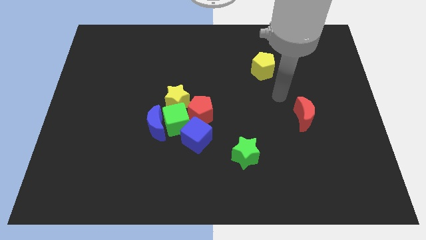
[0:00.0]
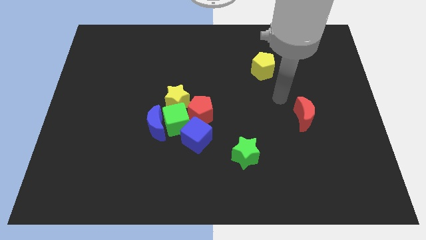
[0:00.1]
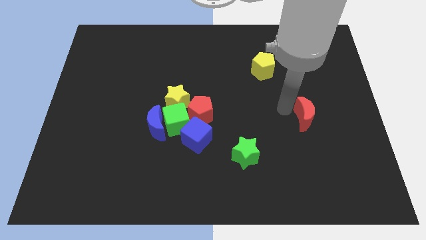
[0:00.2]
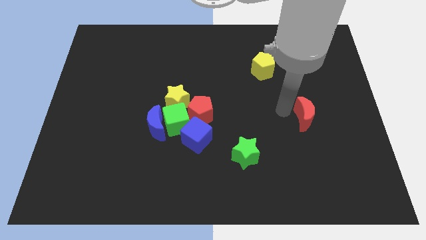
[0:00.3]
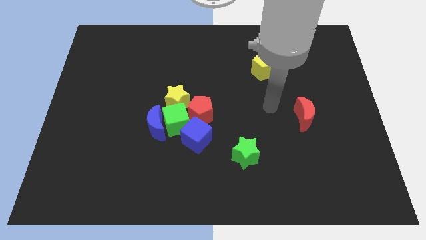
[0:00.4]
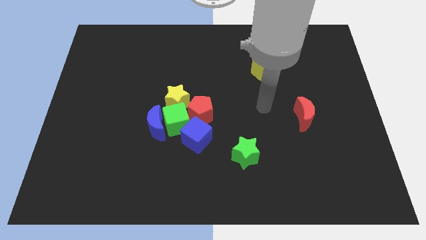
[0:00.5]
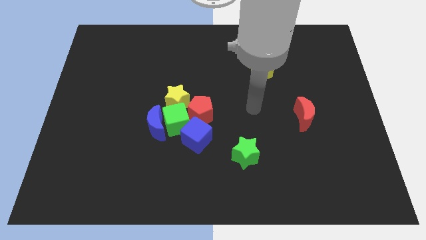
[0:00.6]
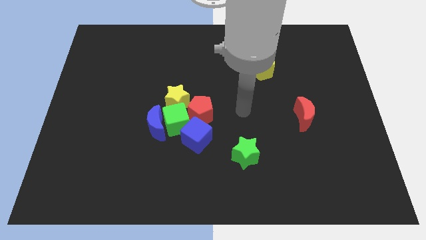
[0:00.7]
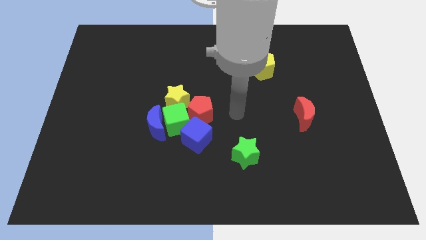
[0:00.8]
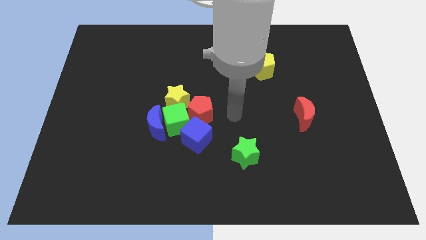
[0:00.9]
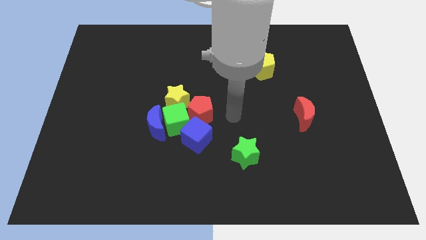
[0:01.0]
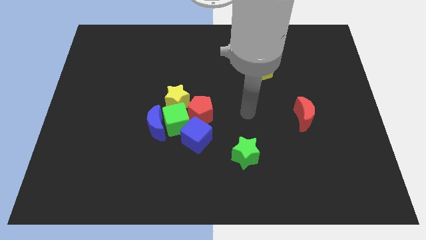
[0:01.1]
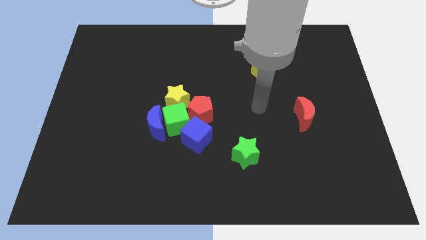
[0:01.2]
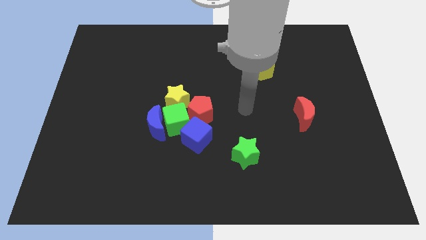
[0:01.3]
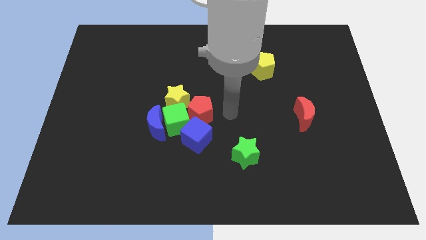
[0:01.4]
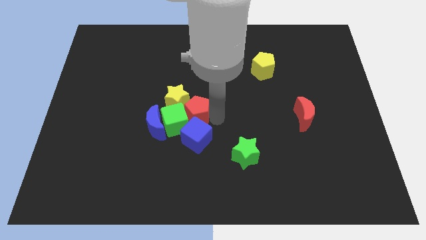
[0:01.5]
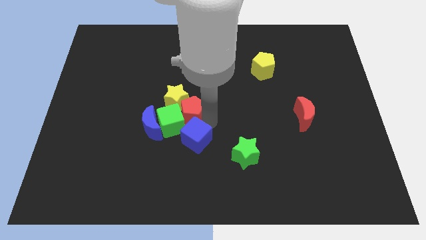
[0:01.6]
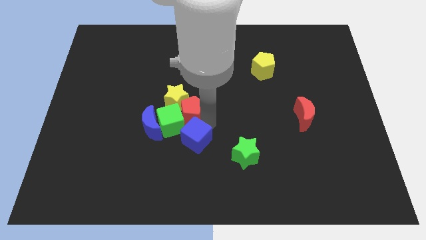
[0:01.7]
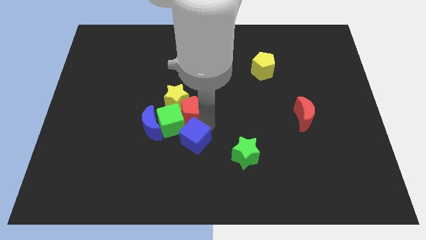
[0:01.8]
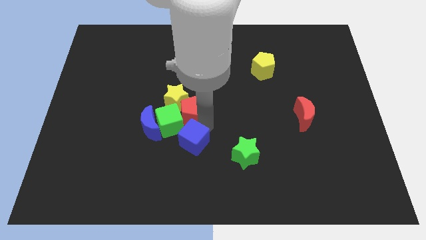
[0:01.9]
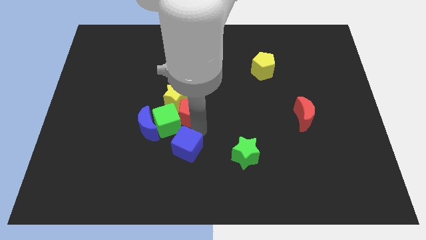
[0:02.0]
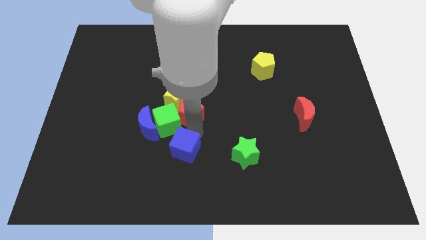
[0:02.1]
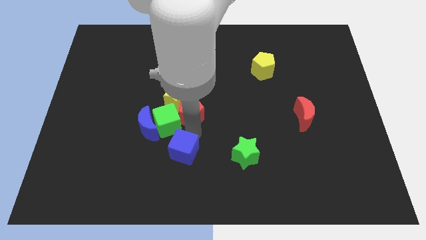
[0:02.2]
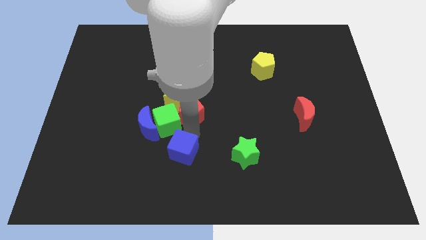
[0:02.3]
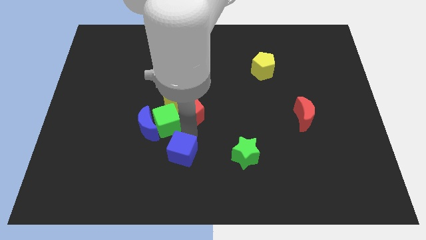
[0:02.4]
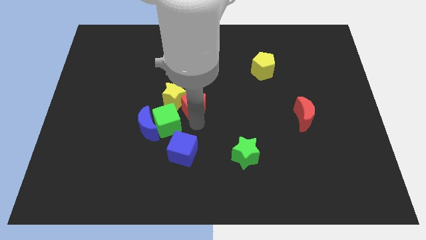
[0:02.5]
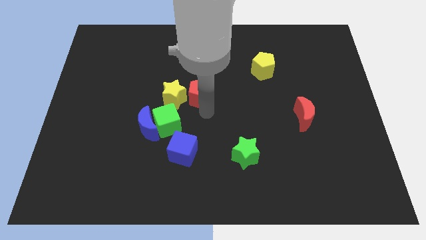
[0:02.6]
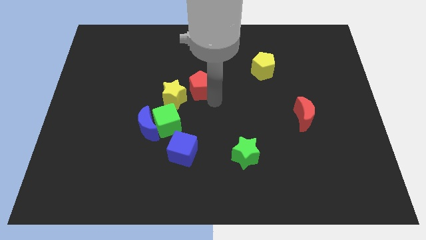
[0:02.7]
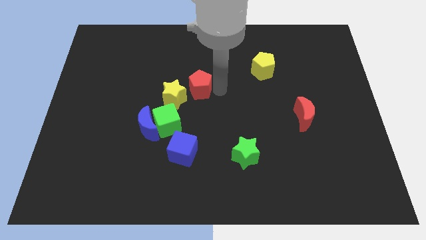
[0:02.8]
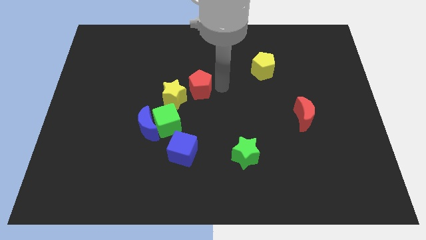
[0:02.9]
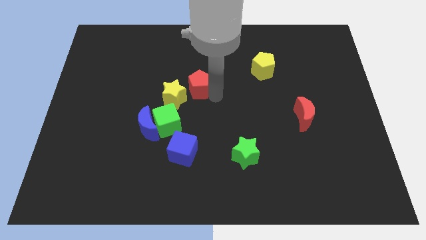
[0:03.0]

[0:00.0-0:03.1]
separate blue cube red pentagon from the group of blocks

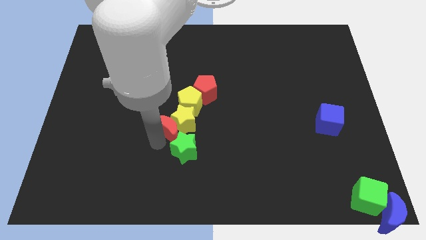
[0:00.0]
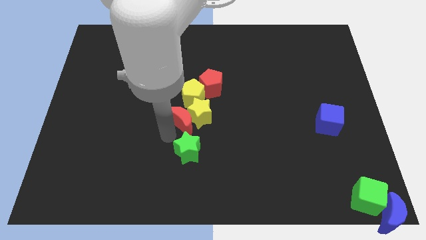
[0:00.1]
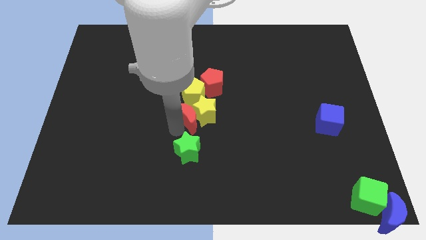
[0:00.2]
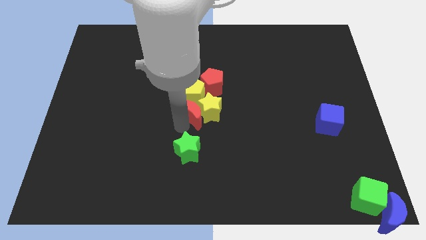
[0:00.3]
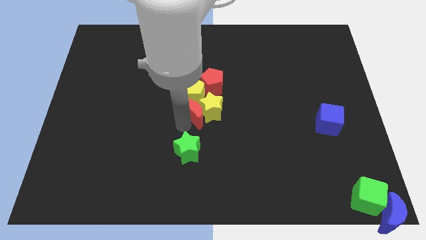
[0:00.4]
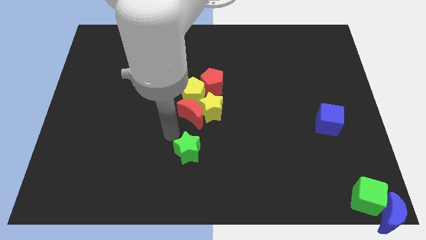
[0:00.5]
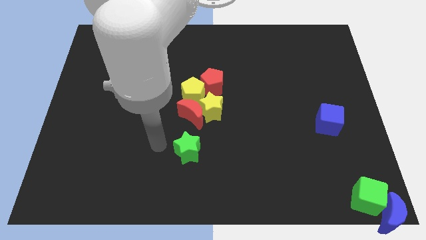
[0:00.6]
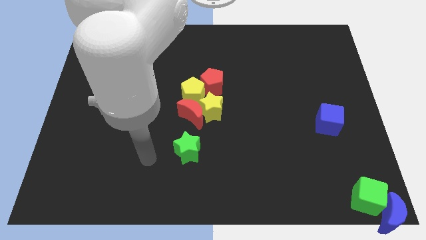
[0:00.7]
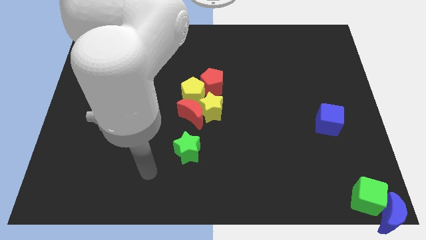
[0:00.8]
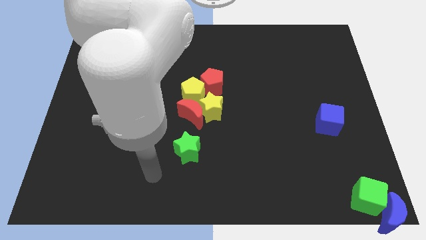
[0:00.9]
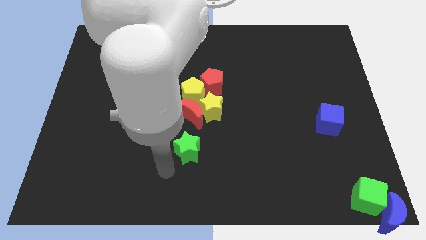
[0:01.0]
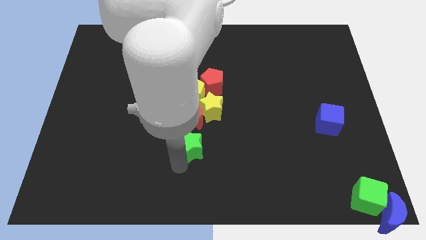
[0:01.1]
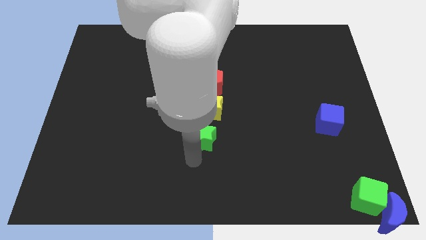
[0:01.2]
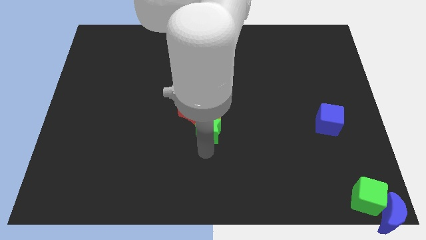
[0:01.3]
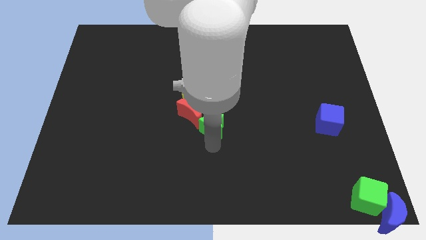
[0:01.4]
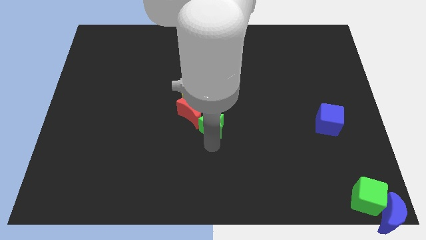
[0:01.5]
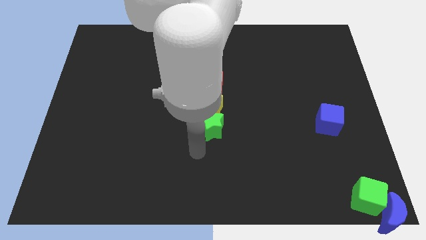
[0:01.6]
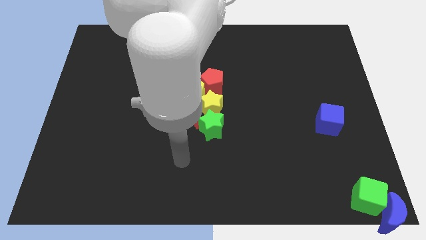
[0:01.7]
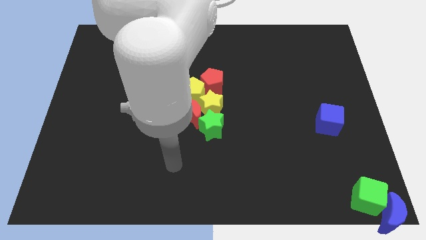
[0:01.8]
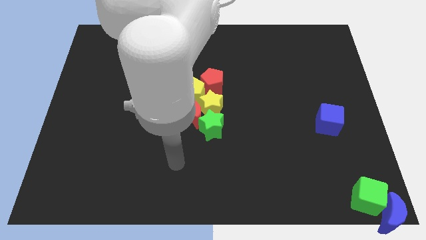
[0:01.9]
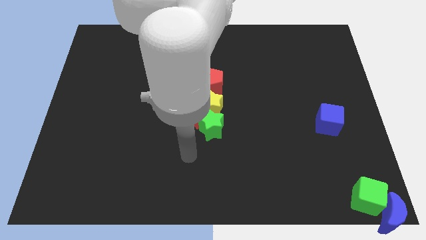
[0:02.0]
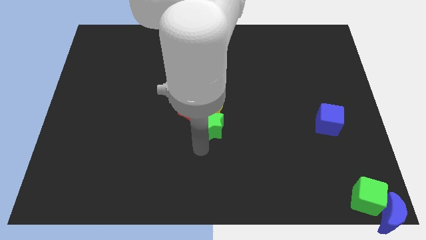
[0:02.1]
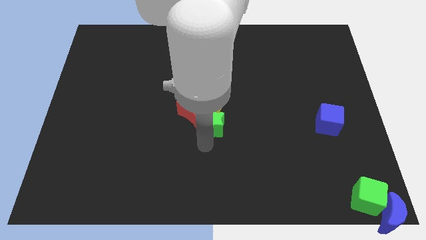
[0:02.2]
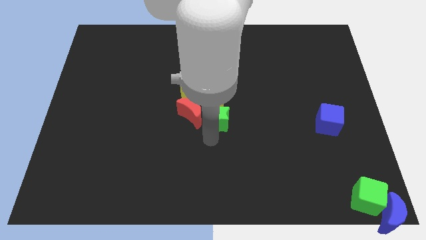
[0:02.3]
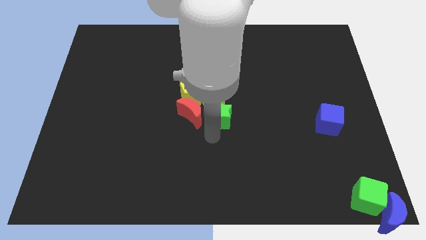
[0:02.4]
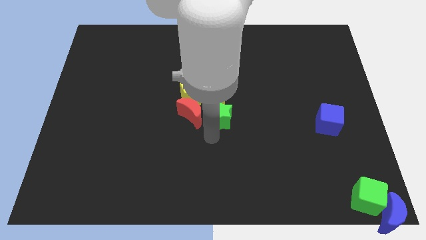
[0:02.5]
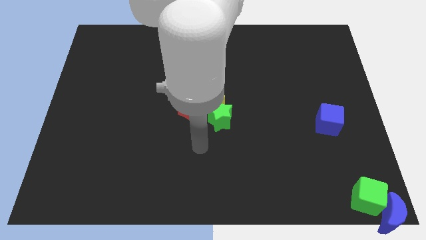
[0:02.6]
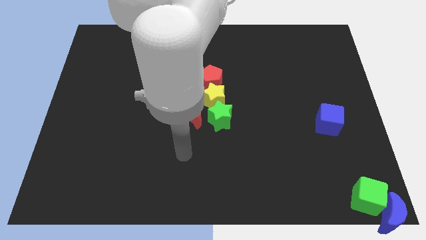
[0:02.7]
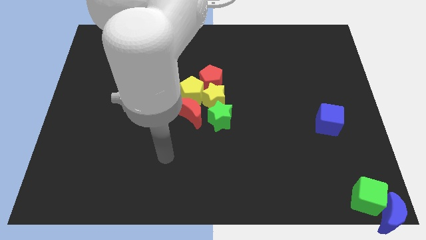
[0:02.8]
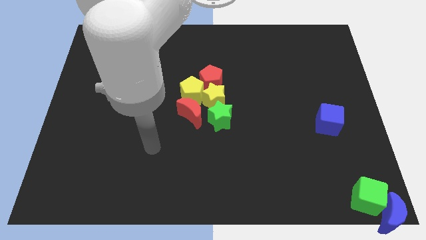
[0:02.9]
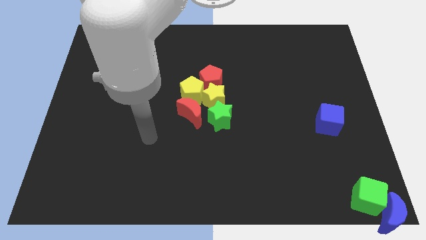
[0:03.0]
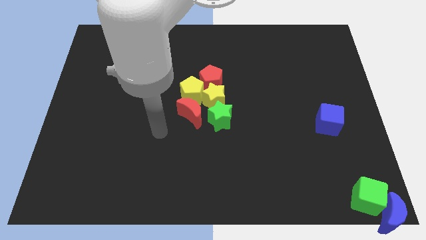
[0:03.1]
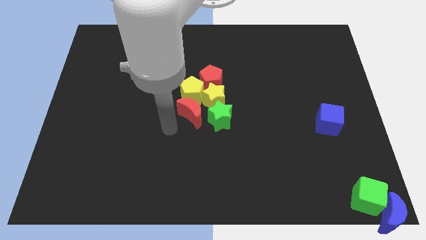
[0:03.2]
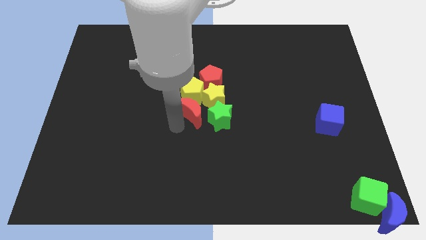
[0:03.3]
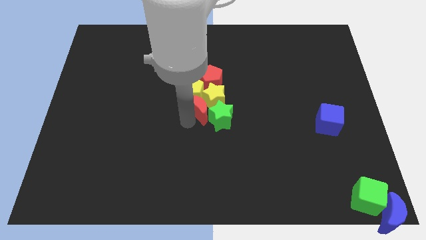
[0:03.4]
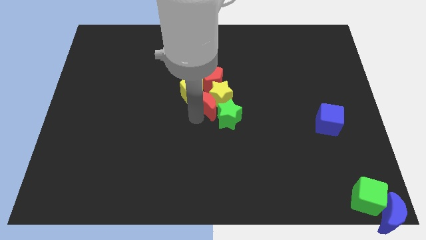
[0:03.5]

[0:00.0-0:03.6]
push the stars pentagons and red moon in the center

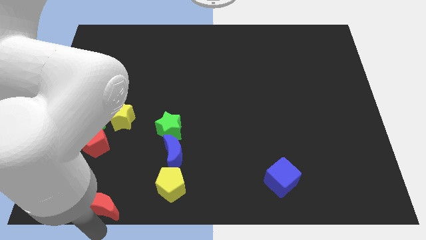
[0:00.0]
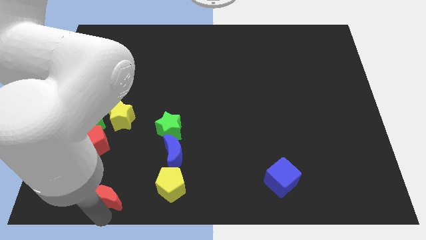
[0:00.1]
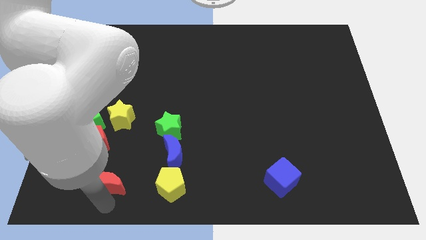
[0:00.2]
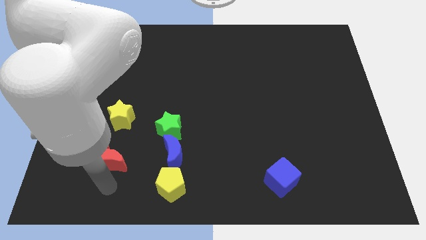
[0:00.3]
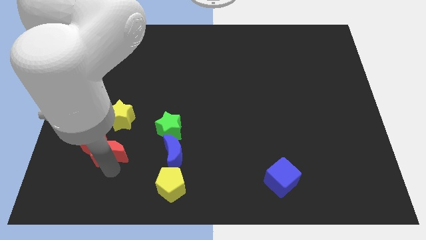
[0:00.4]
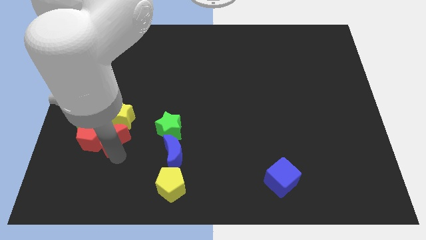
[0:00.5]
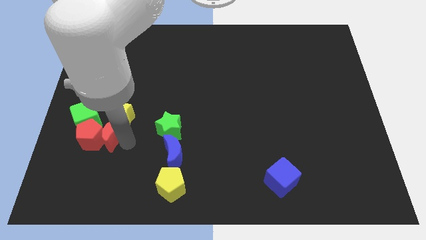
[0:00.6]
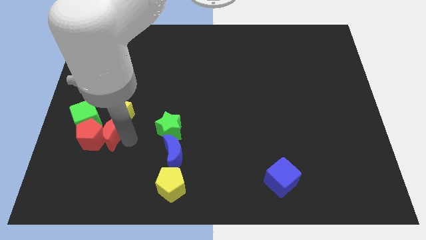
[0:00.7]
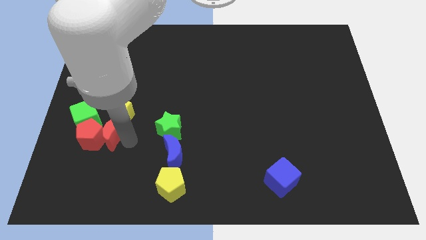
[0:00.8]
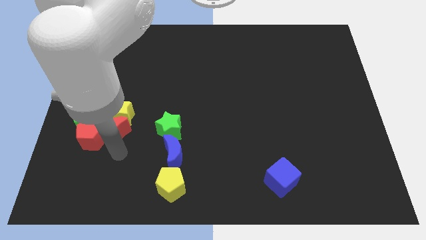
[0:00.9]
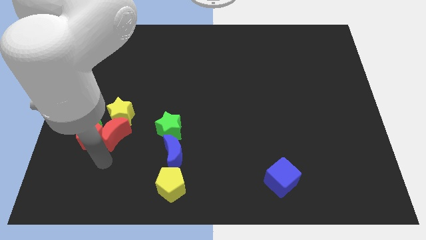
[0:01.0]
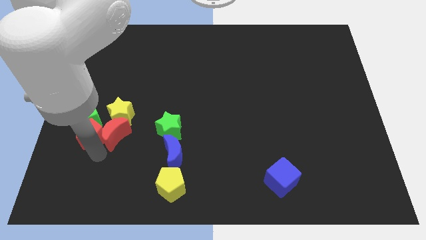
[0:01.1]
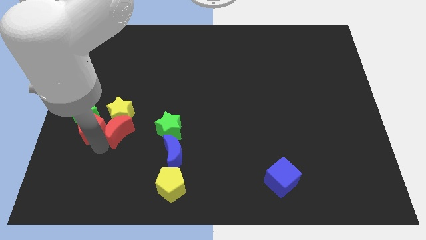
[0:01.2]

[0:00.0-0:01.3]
move red crescent to the right of the red pentagon

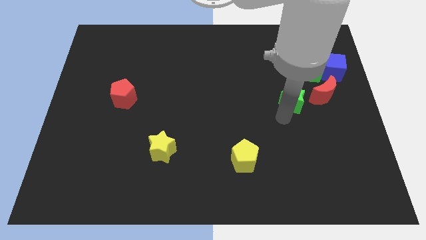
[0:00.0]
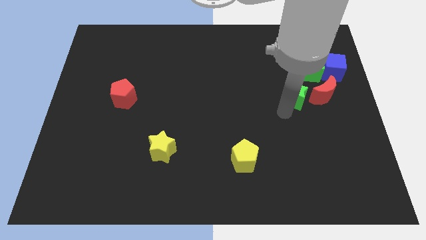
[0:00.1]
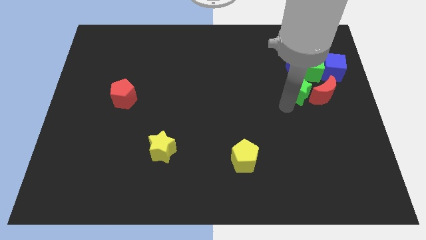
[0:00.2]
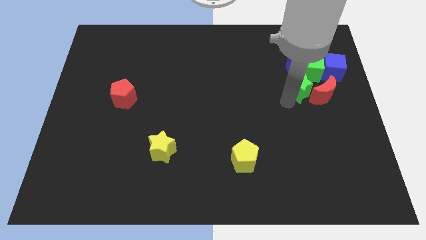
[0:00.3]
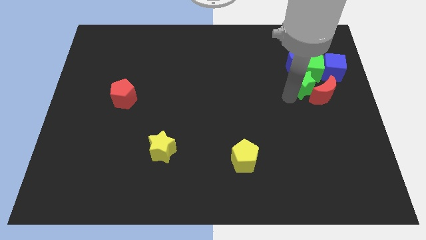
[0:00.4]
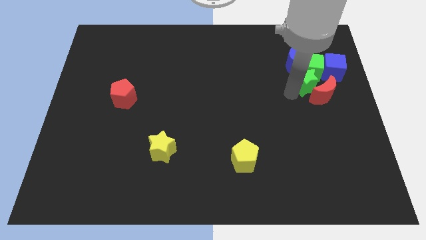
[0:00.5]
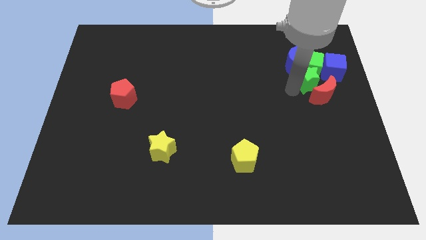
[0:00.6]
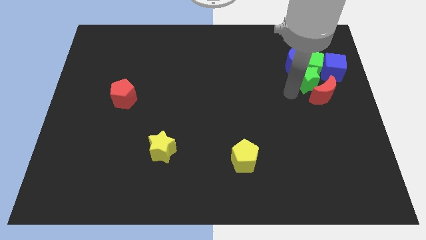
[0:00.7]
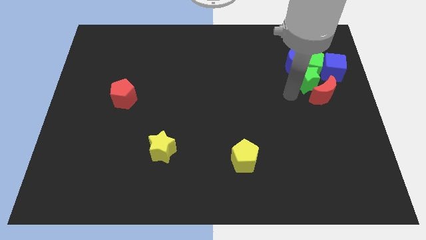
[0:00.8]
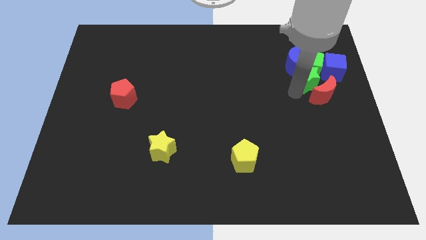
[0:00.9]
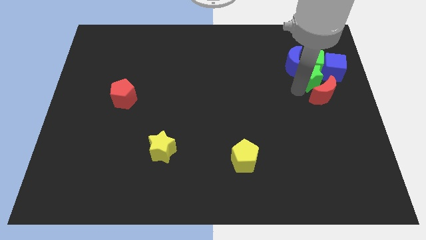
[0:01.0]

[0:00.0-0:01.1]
push the green star into the green cube
